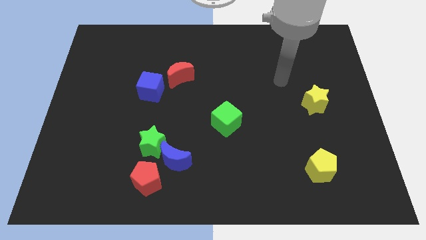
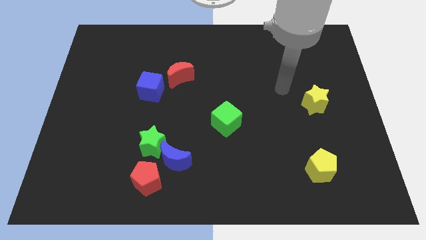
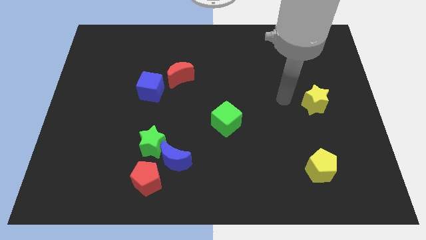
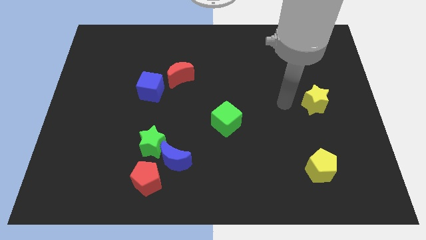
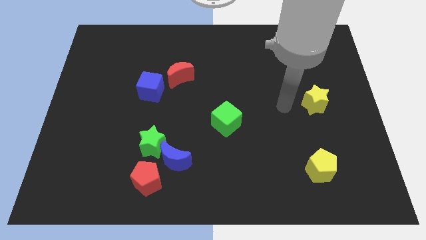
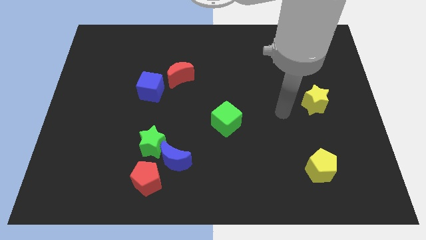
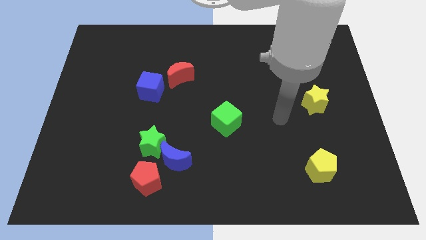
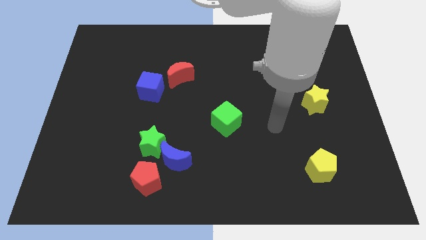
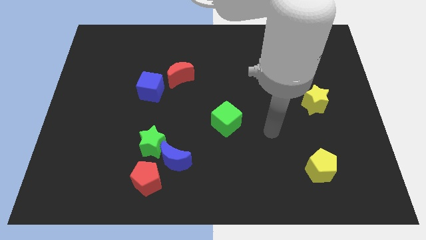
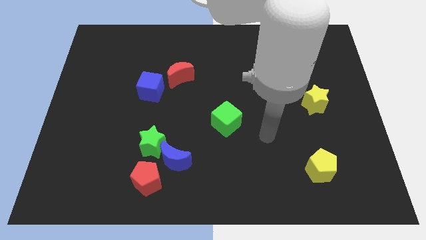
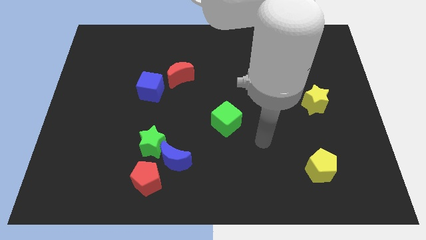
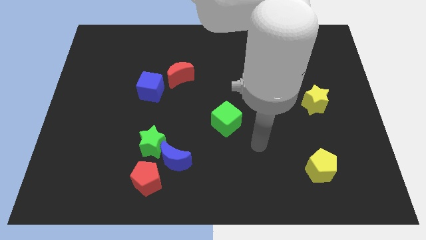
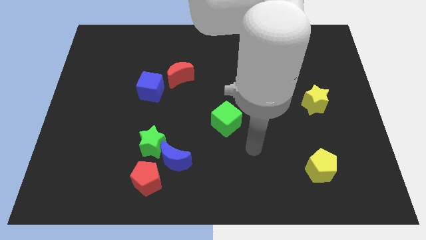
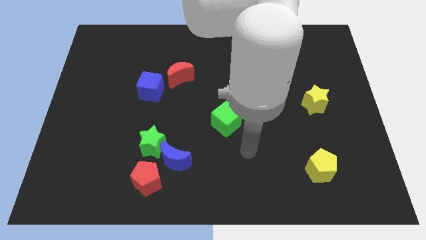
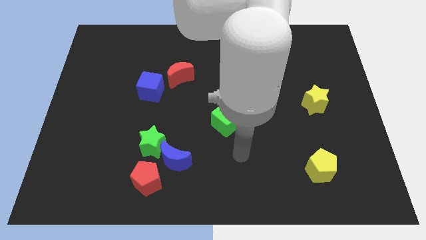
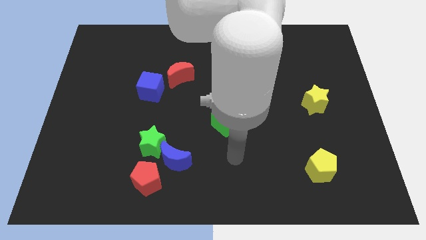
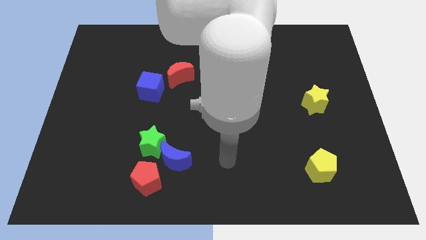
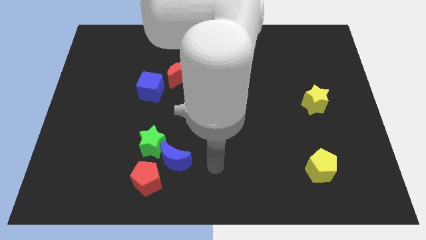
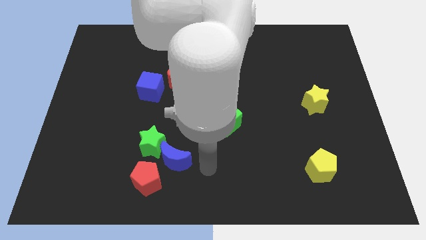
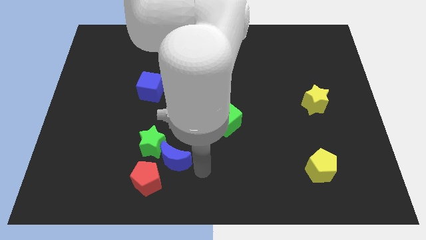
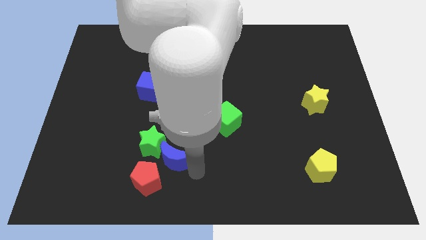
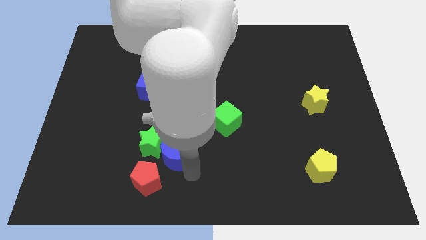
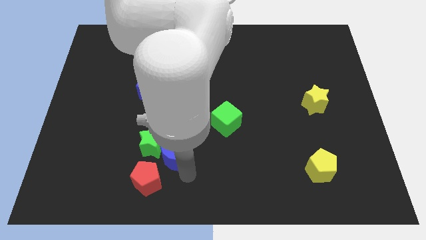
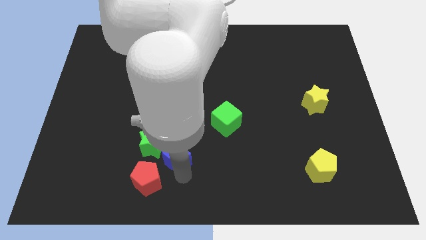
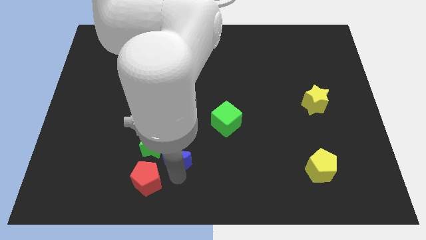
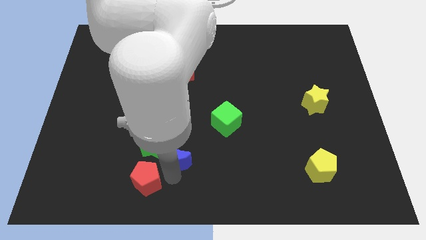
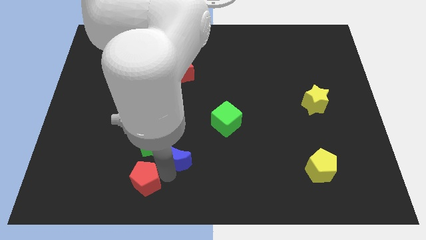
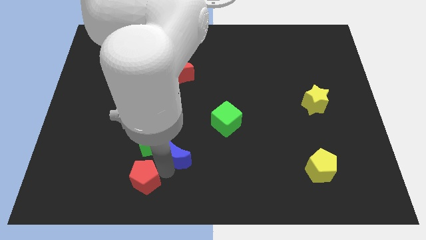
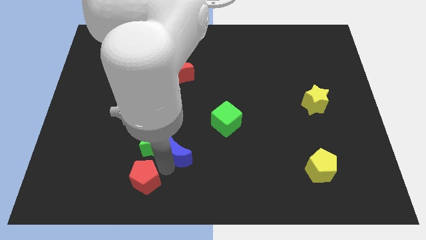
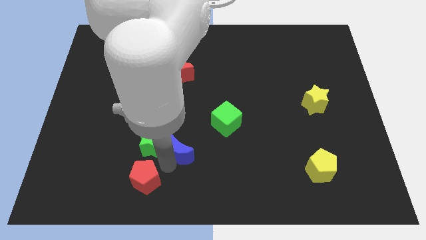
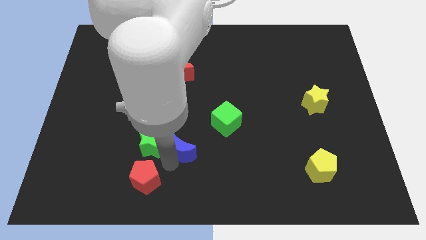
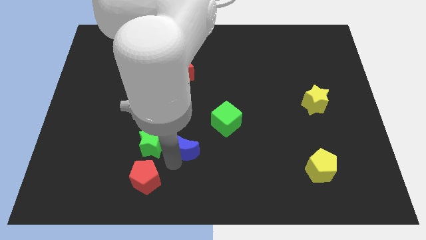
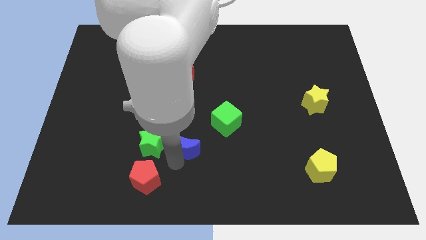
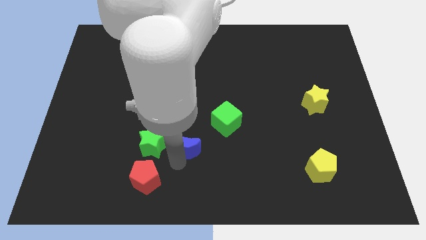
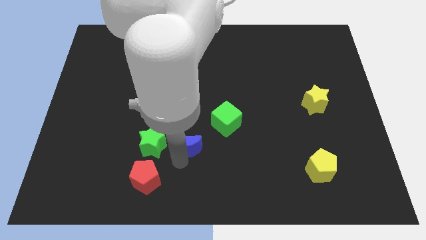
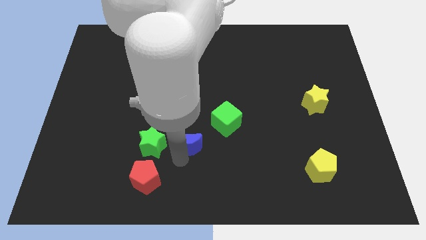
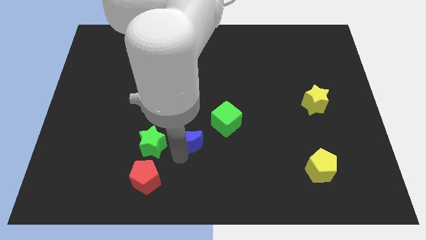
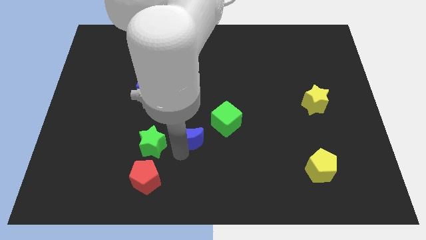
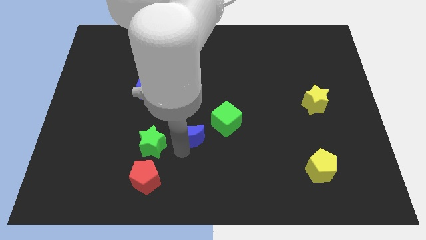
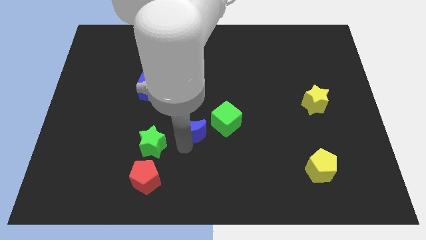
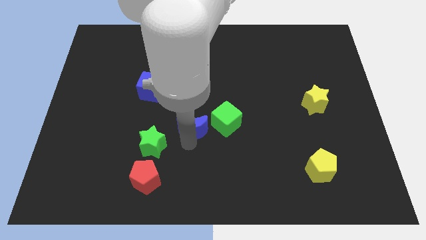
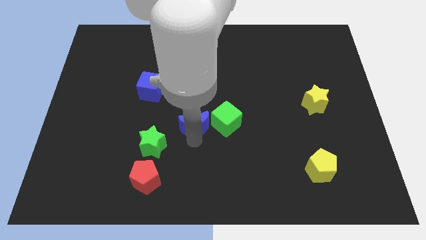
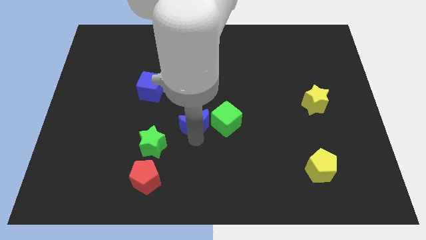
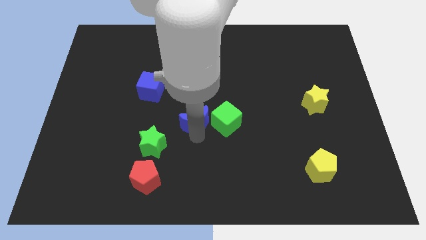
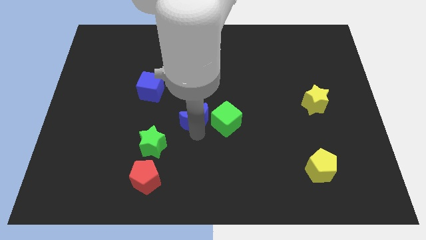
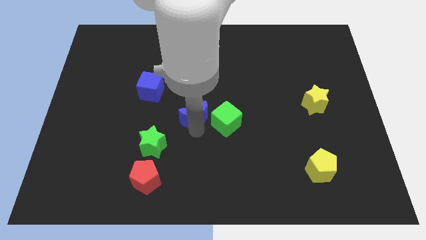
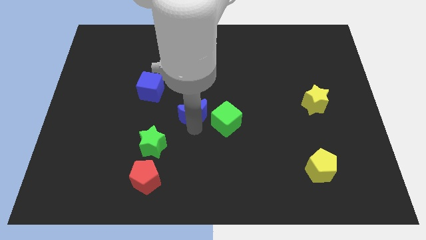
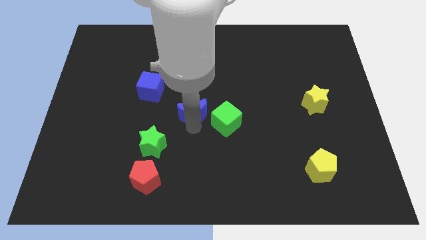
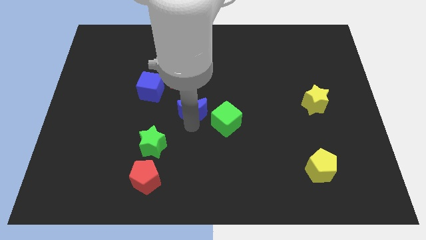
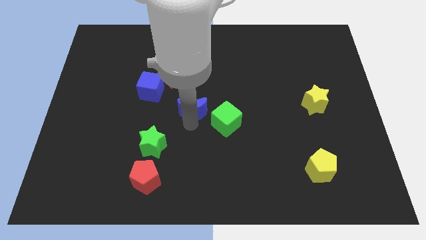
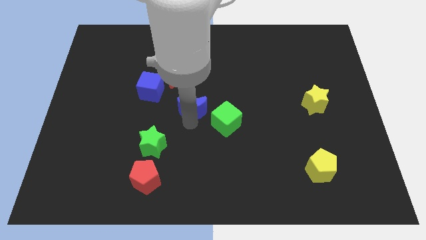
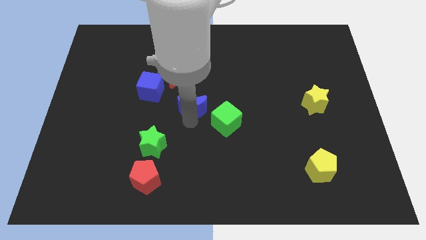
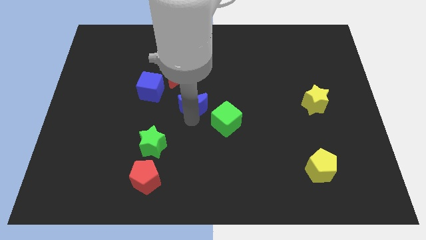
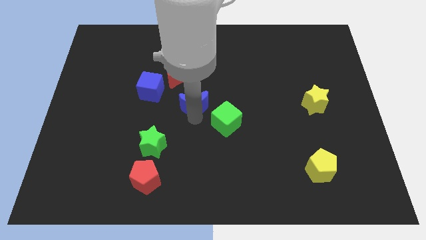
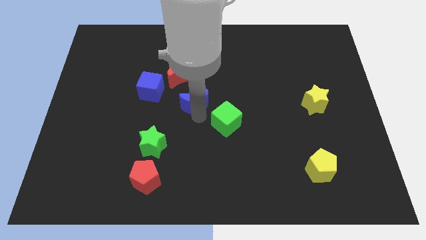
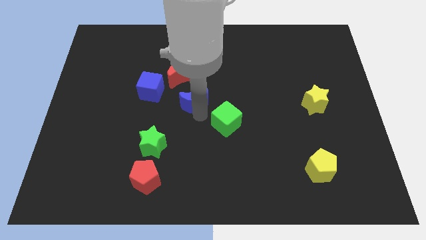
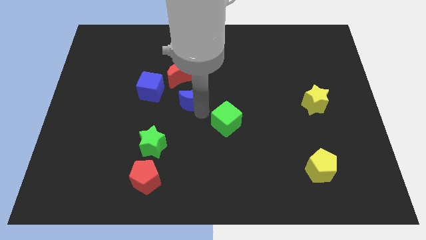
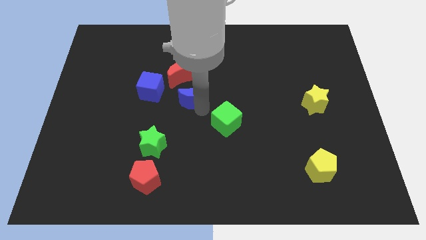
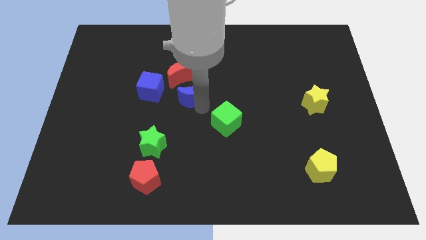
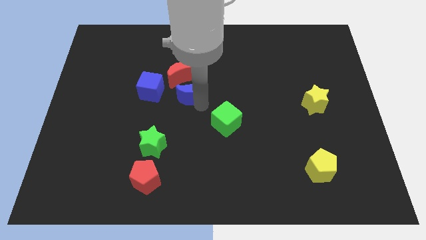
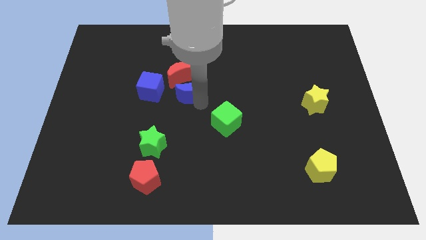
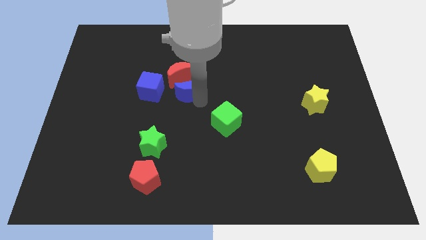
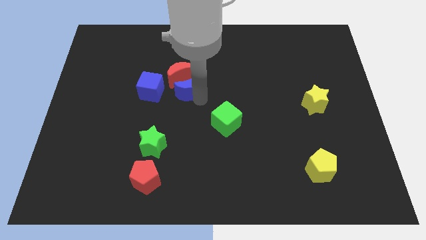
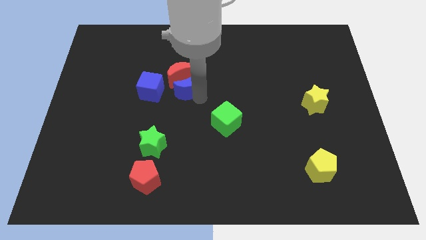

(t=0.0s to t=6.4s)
put the blue moon next to the red moon

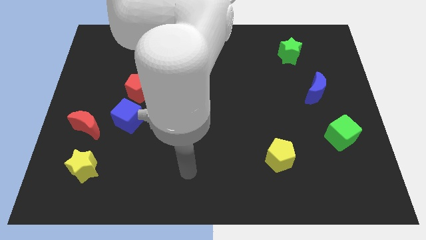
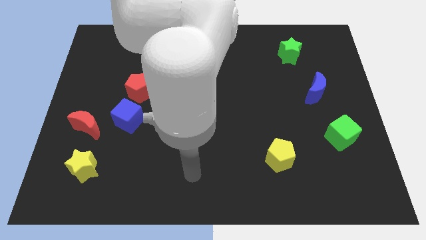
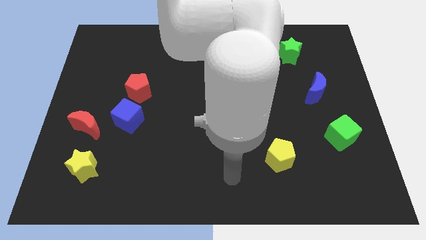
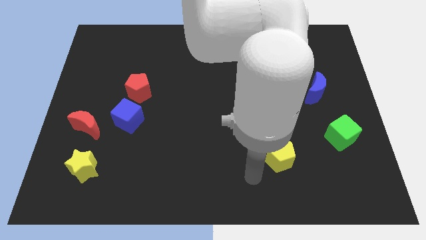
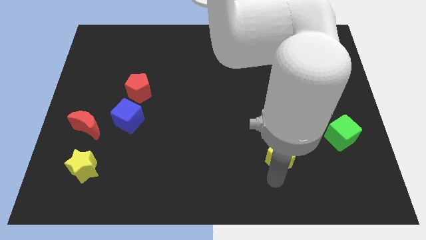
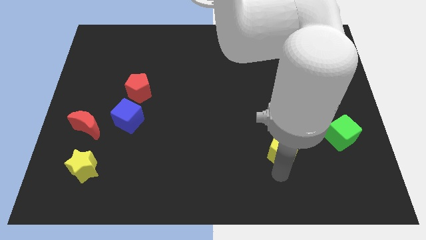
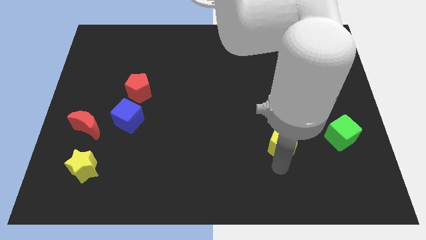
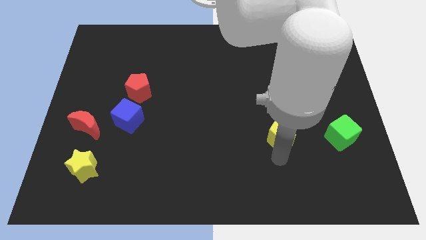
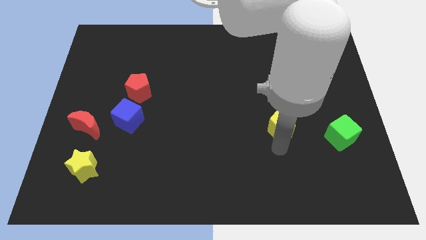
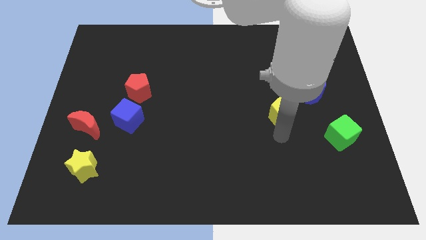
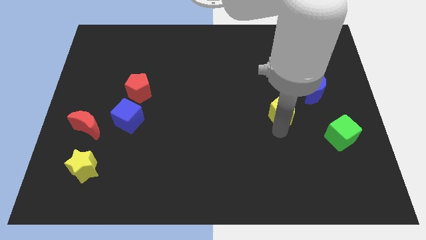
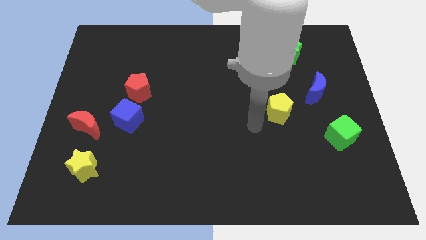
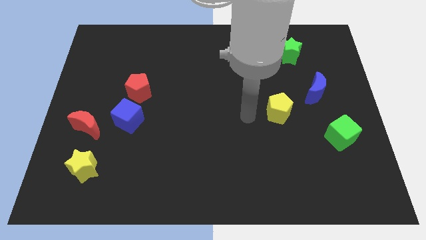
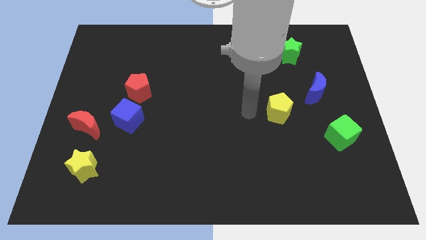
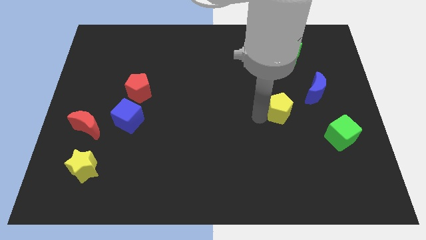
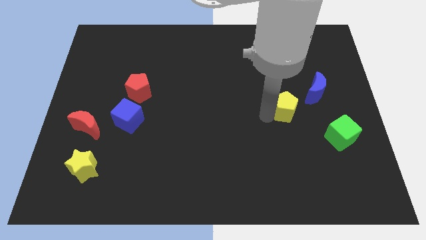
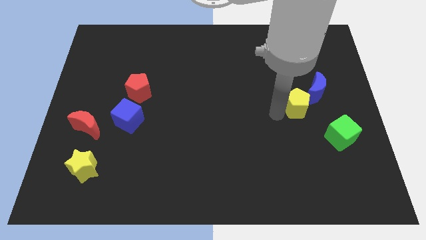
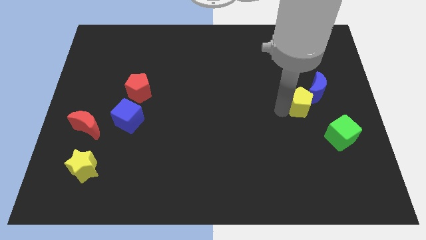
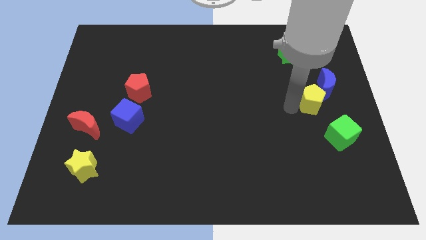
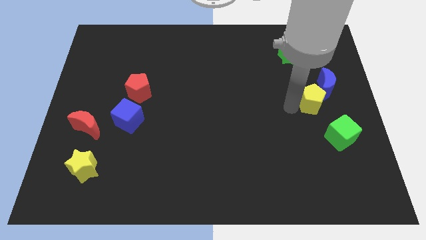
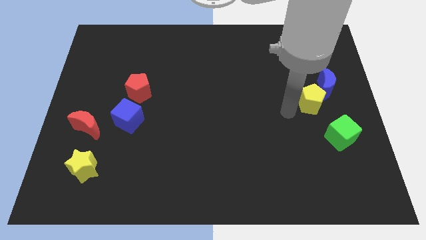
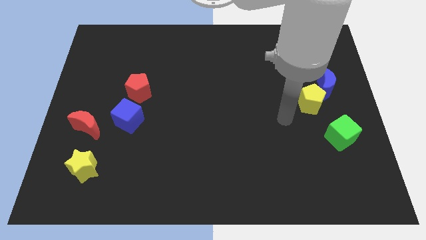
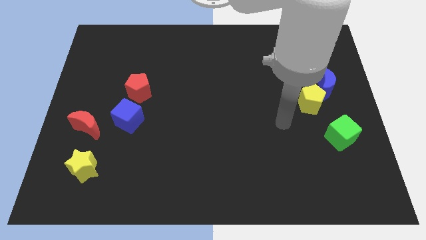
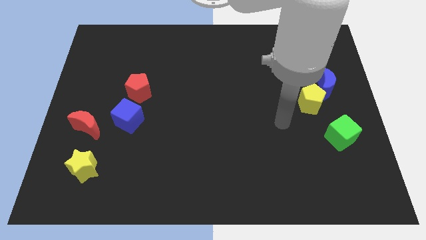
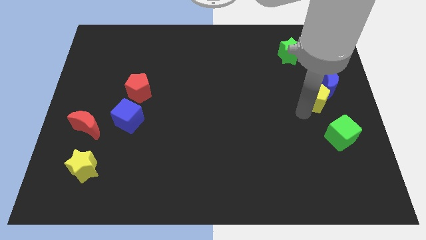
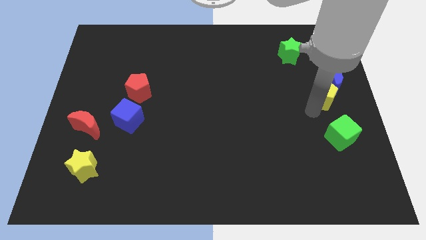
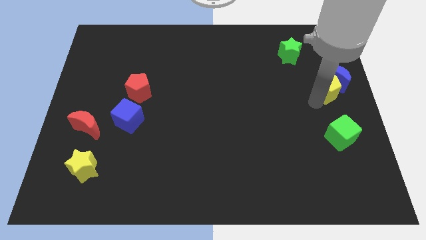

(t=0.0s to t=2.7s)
push the yellow pentagon next to the blue moon
